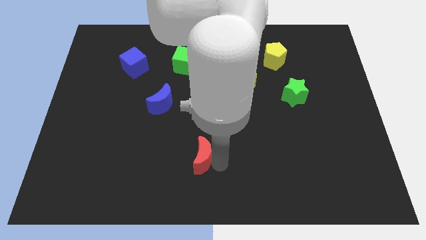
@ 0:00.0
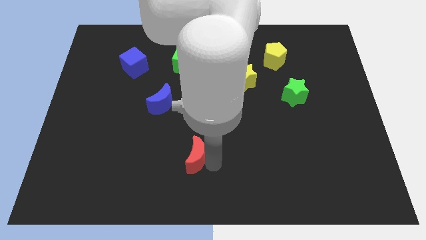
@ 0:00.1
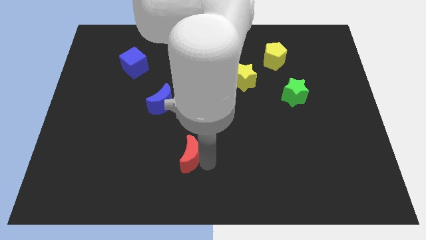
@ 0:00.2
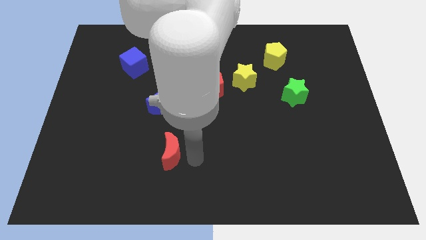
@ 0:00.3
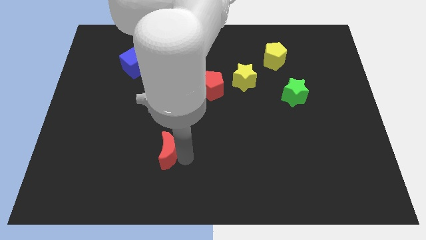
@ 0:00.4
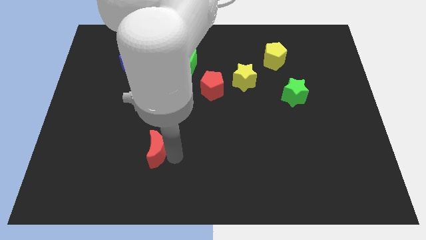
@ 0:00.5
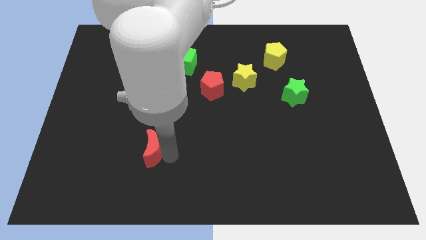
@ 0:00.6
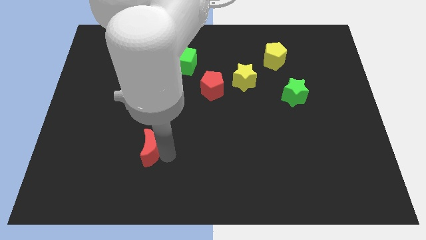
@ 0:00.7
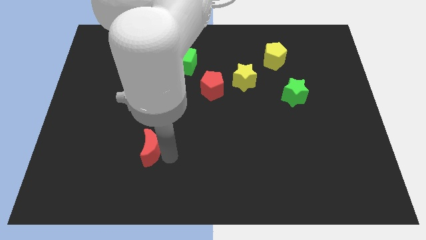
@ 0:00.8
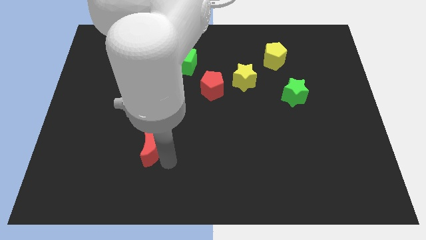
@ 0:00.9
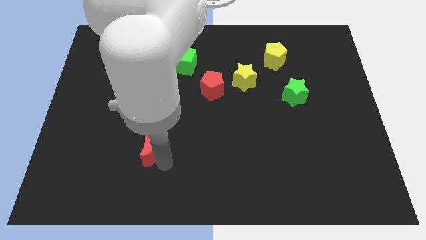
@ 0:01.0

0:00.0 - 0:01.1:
place the red crescent vertically below the blue crescent

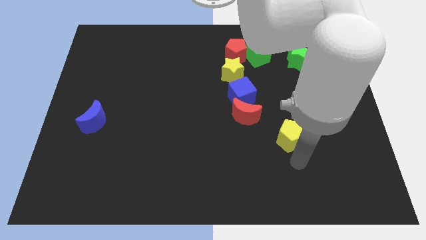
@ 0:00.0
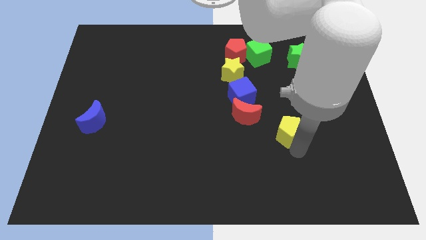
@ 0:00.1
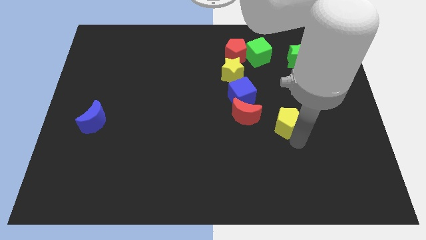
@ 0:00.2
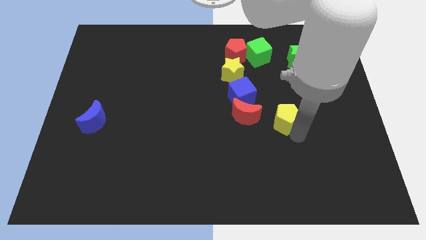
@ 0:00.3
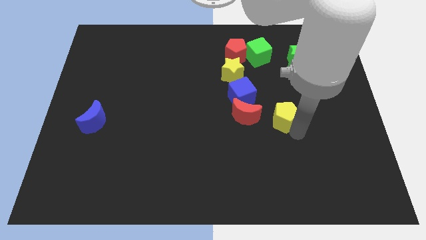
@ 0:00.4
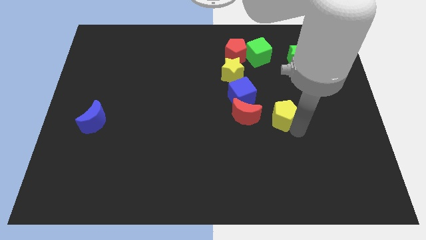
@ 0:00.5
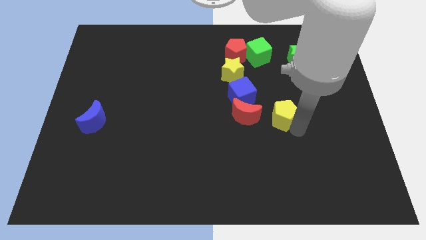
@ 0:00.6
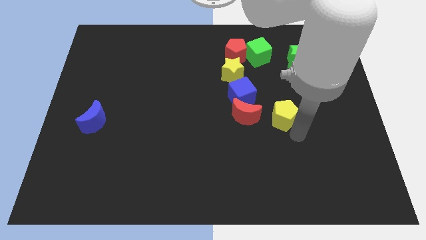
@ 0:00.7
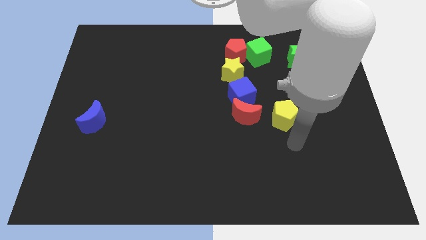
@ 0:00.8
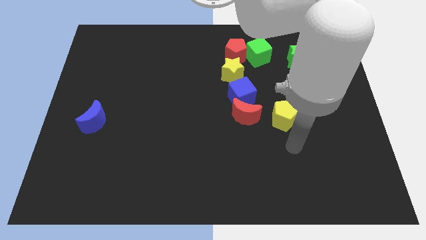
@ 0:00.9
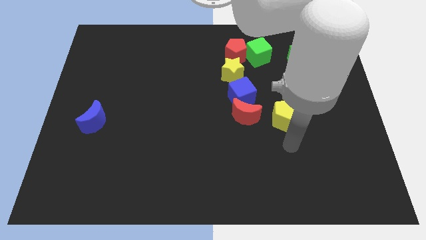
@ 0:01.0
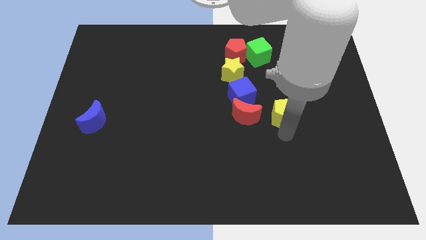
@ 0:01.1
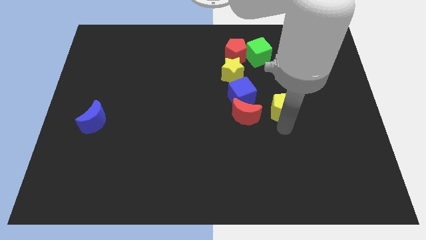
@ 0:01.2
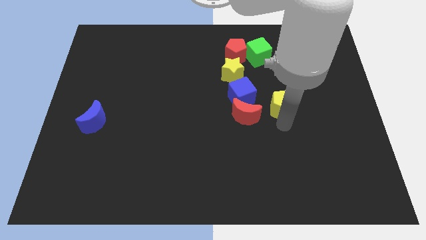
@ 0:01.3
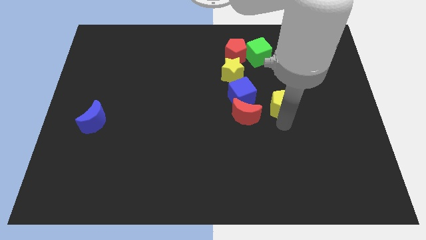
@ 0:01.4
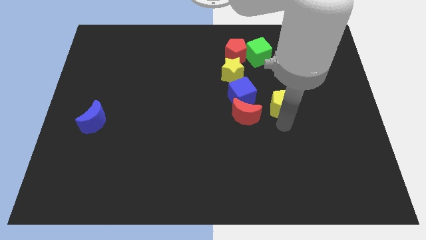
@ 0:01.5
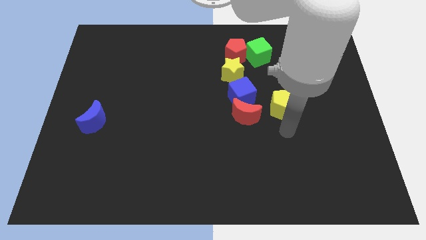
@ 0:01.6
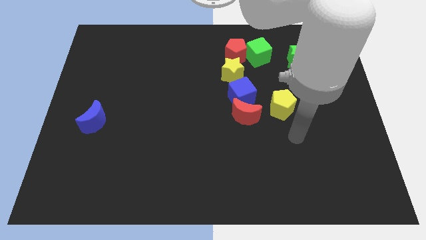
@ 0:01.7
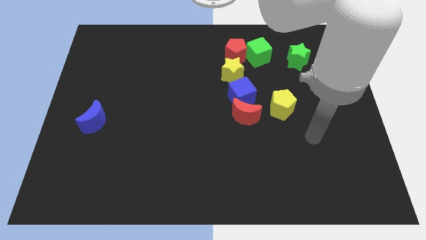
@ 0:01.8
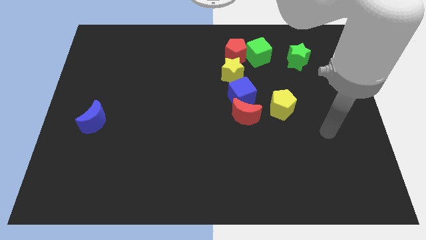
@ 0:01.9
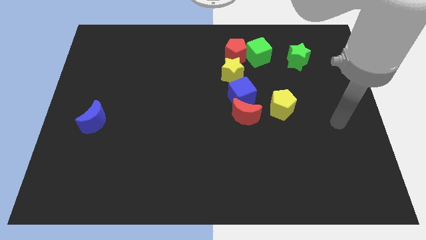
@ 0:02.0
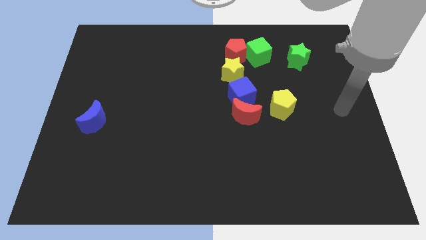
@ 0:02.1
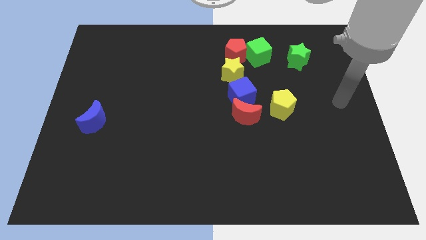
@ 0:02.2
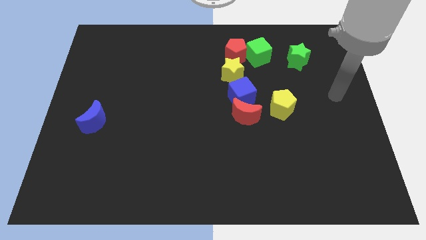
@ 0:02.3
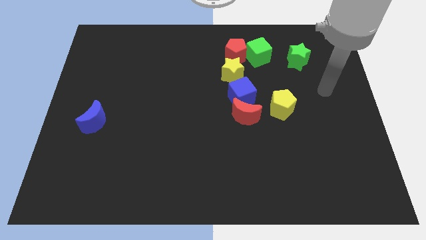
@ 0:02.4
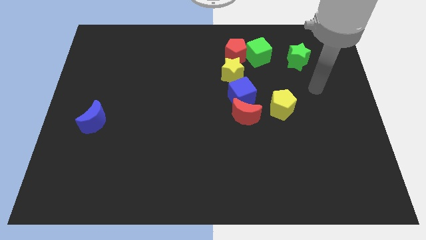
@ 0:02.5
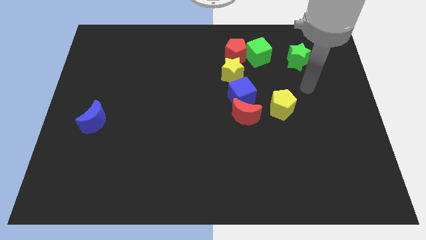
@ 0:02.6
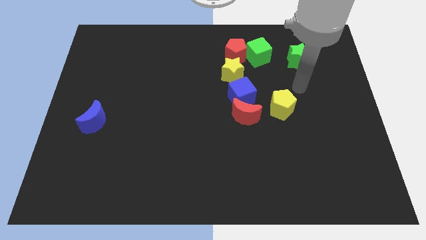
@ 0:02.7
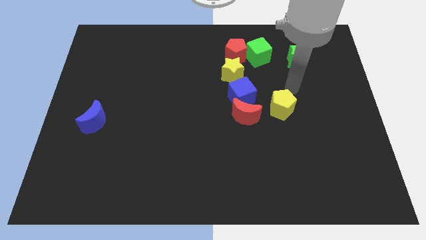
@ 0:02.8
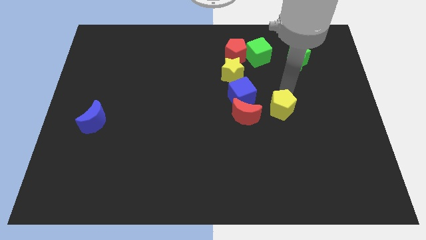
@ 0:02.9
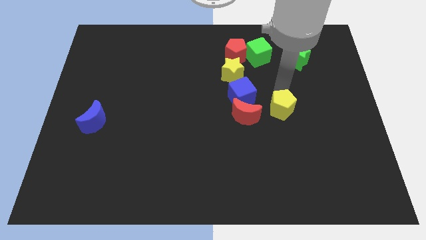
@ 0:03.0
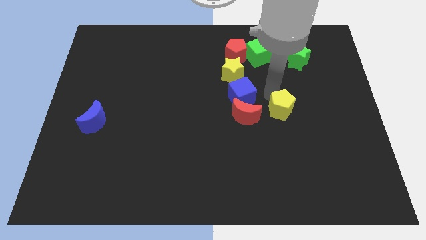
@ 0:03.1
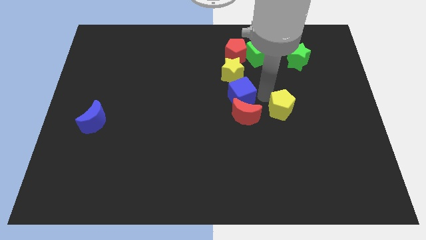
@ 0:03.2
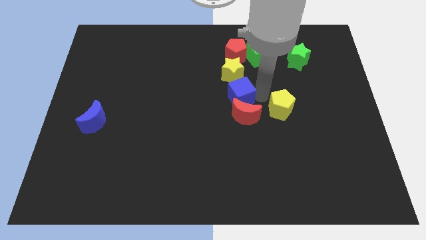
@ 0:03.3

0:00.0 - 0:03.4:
push the yellow pentagon slightly to the top

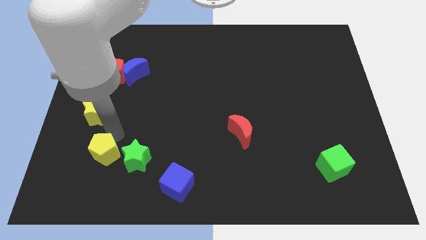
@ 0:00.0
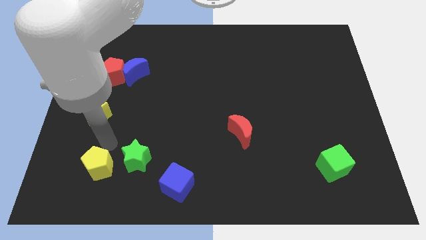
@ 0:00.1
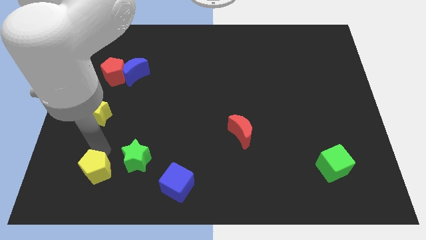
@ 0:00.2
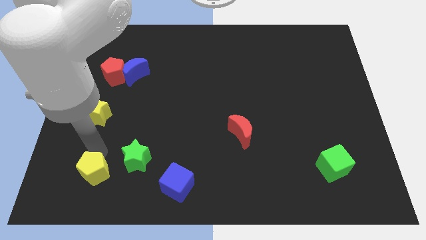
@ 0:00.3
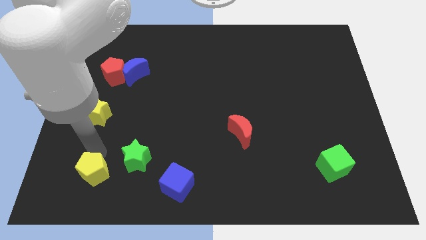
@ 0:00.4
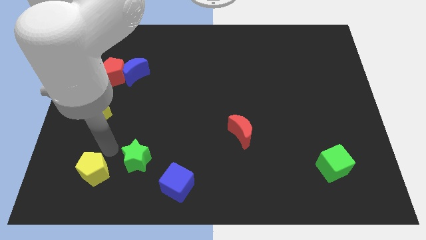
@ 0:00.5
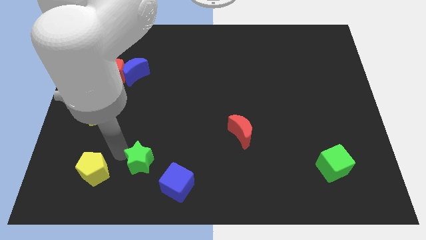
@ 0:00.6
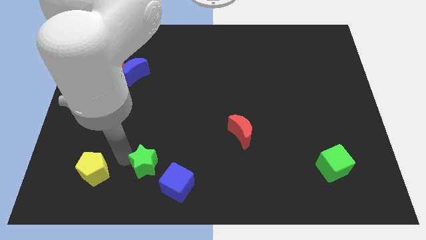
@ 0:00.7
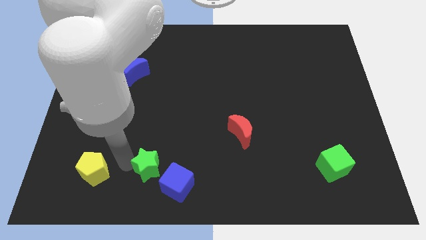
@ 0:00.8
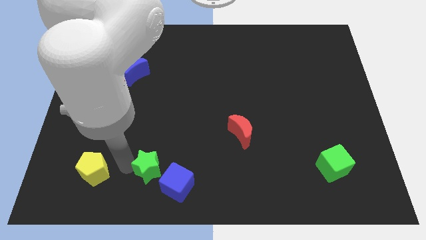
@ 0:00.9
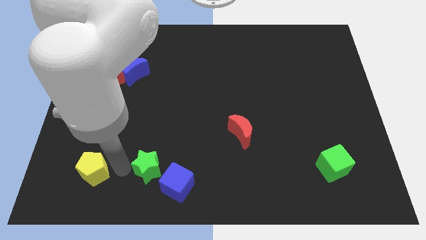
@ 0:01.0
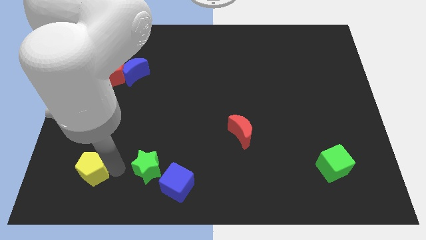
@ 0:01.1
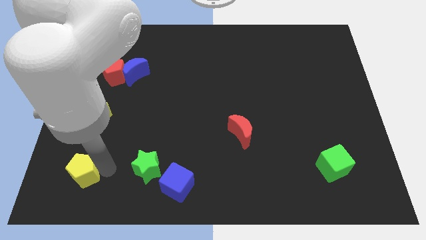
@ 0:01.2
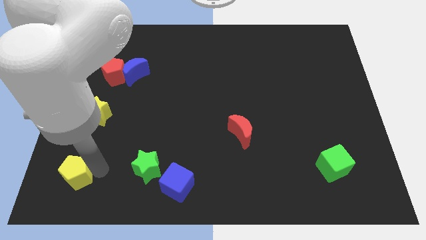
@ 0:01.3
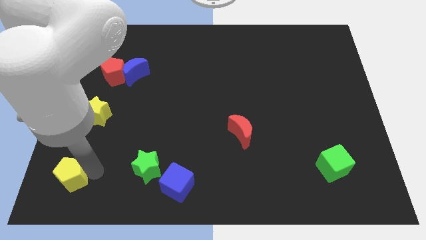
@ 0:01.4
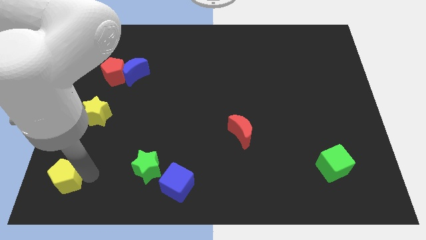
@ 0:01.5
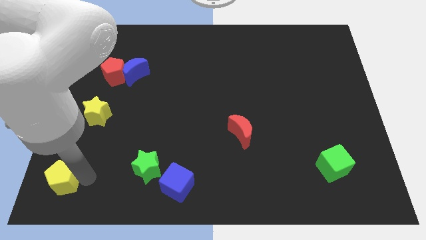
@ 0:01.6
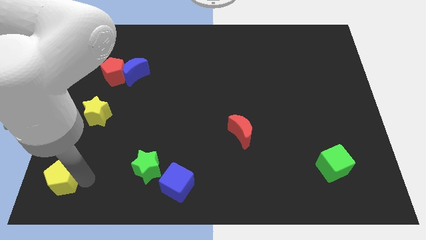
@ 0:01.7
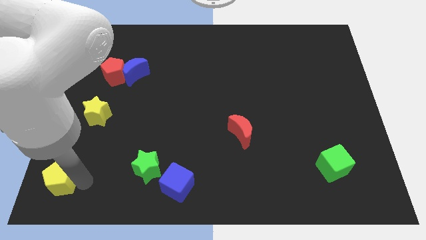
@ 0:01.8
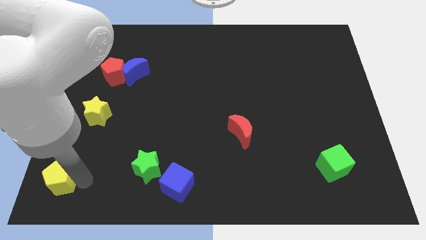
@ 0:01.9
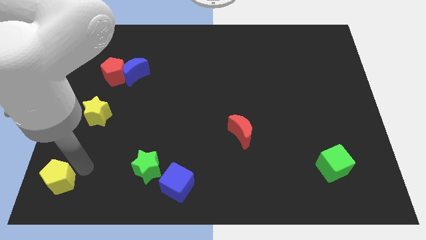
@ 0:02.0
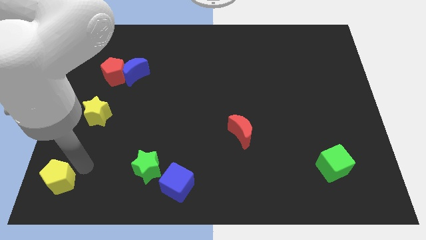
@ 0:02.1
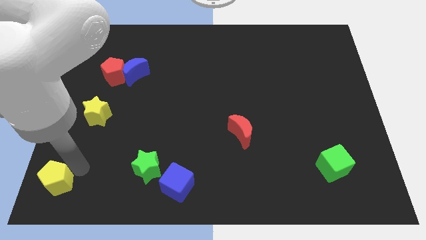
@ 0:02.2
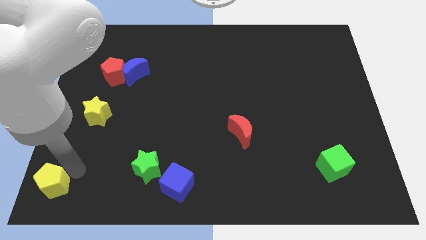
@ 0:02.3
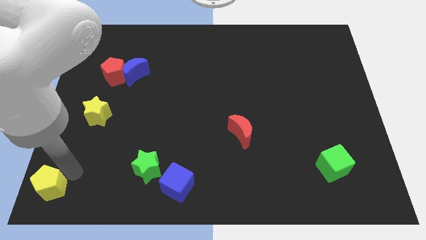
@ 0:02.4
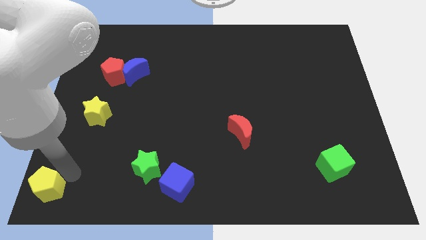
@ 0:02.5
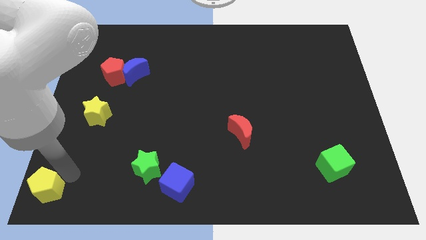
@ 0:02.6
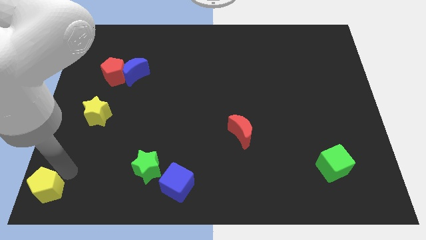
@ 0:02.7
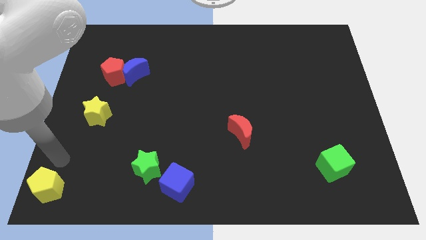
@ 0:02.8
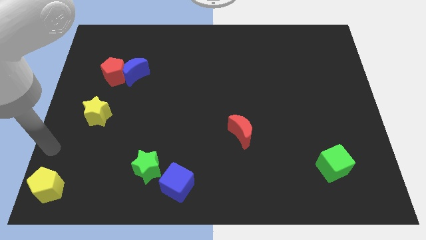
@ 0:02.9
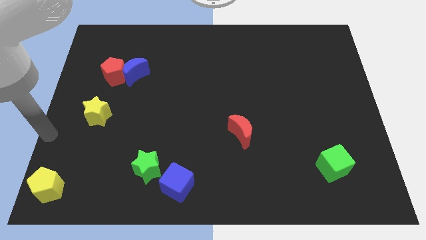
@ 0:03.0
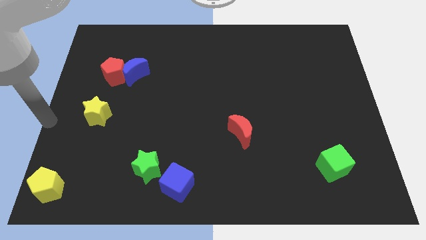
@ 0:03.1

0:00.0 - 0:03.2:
place yellow pentagon to the bottom left corner of the board

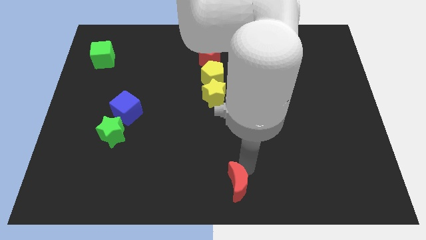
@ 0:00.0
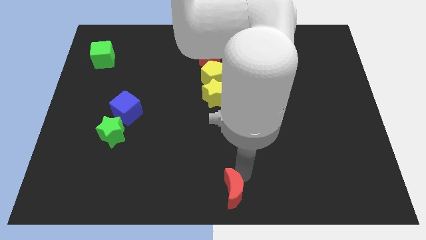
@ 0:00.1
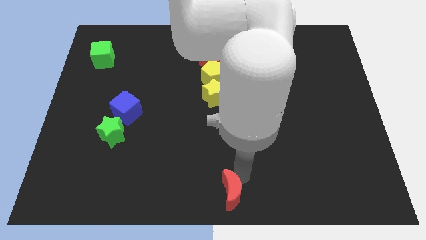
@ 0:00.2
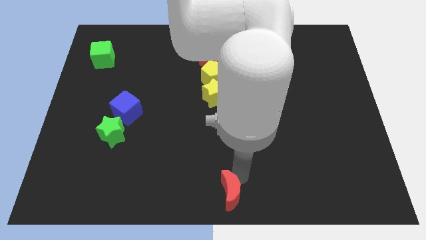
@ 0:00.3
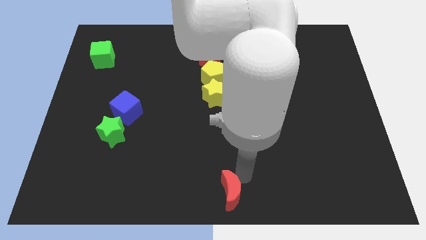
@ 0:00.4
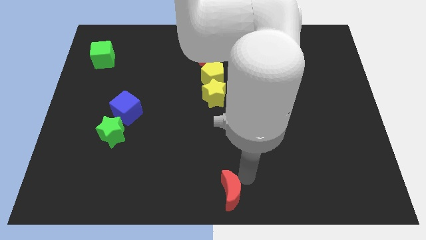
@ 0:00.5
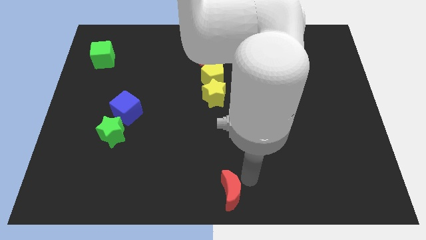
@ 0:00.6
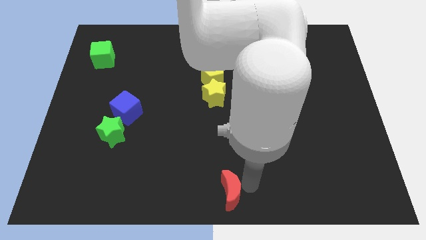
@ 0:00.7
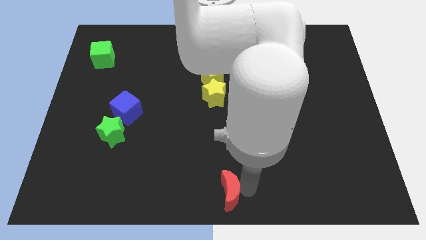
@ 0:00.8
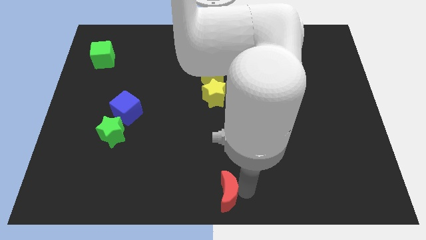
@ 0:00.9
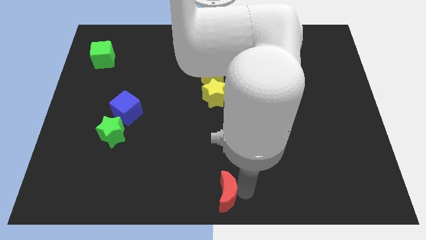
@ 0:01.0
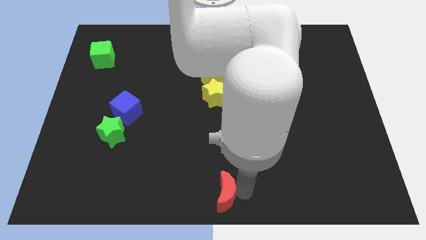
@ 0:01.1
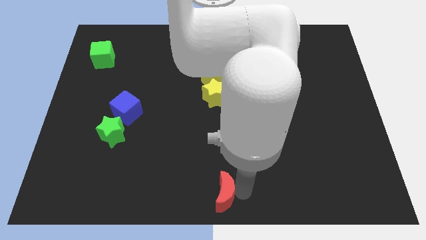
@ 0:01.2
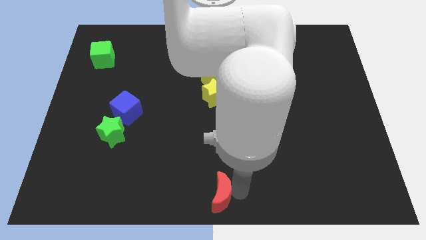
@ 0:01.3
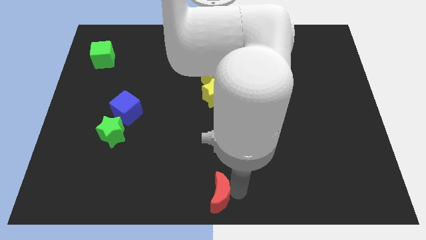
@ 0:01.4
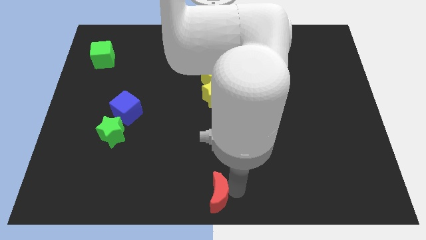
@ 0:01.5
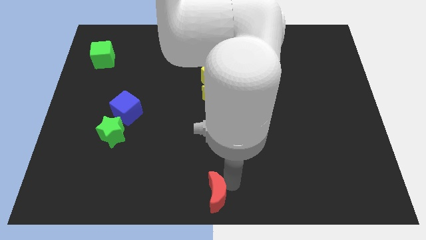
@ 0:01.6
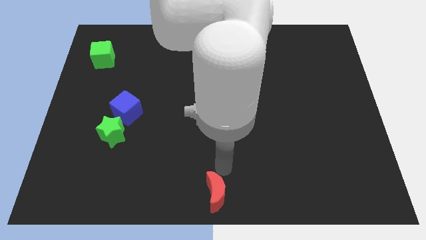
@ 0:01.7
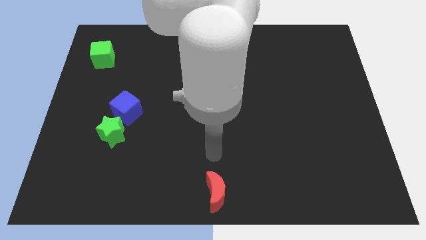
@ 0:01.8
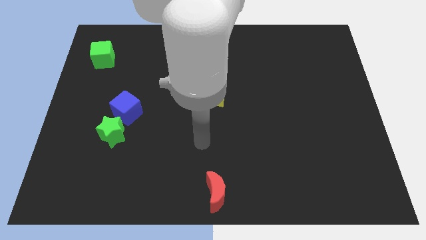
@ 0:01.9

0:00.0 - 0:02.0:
move the red crescent bottom center of the board
